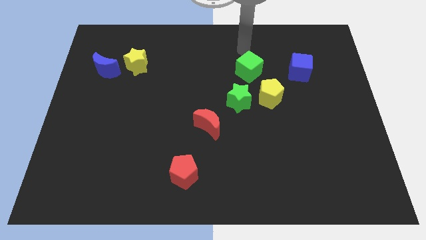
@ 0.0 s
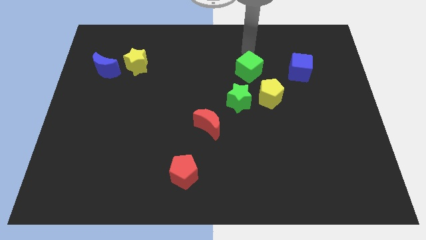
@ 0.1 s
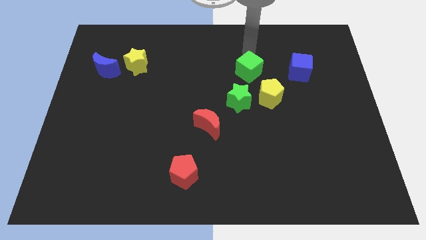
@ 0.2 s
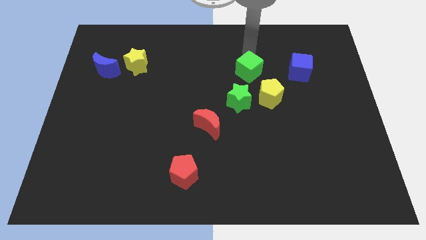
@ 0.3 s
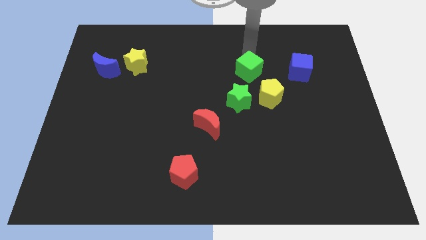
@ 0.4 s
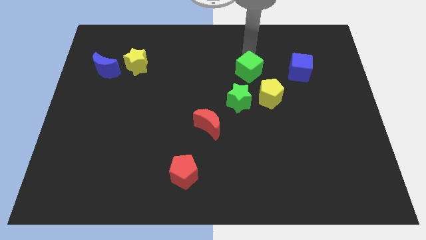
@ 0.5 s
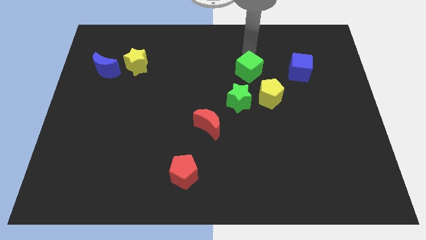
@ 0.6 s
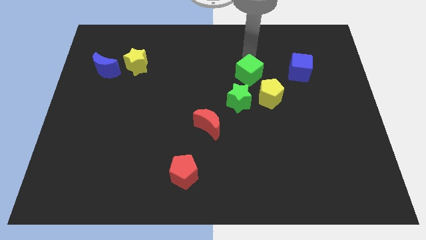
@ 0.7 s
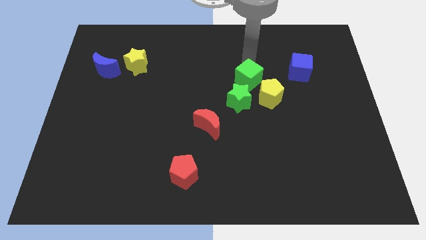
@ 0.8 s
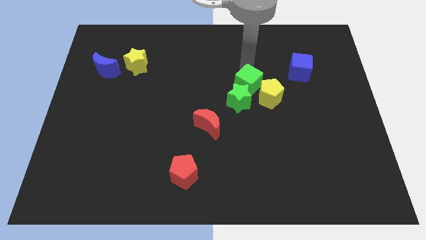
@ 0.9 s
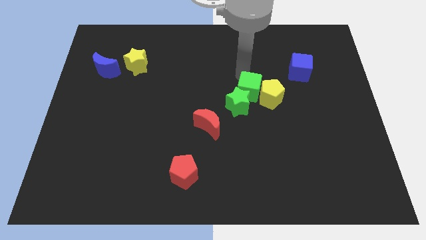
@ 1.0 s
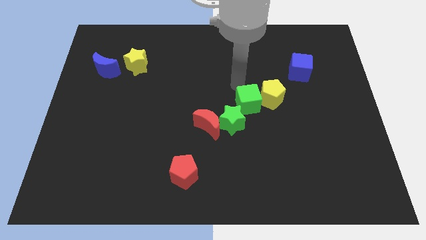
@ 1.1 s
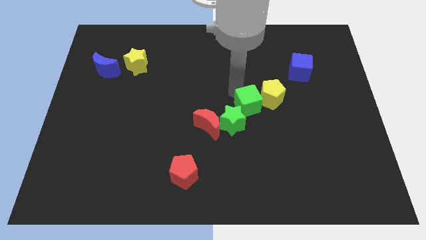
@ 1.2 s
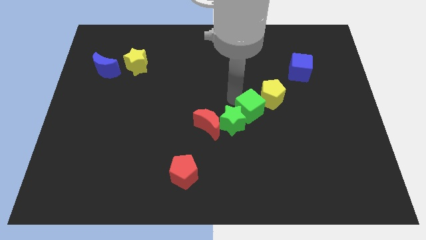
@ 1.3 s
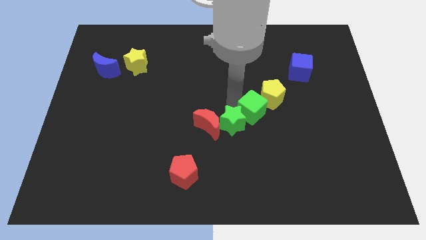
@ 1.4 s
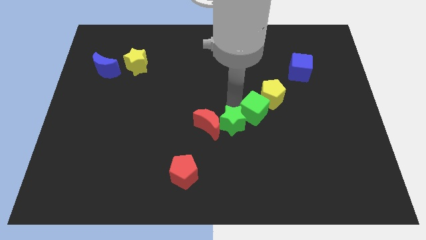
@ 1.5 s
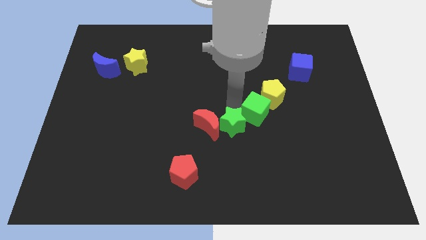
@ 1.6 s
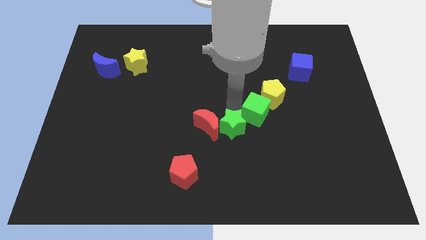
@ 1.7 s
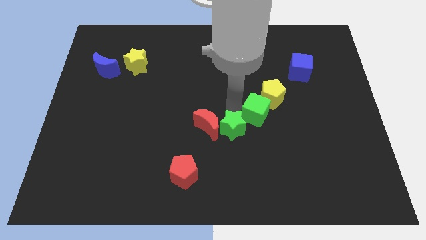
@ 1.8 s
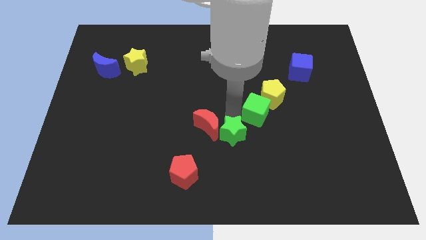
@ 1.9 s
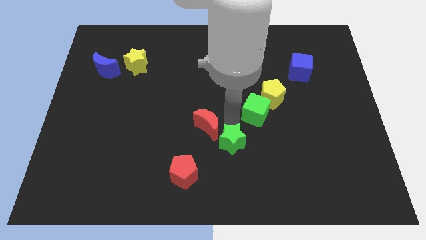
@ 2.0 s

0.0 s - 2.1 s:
push the green cube into the green star

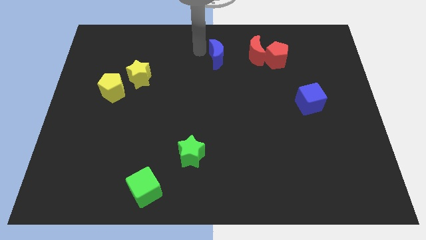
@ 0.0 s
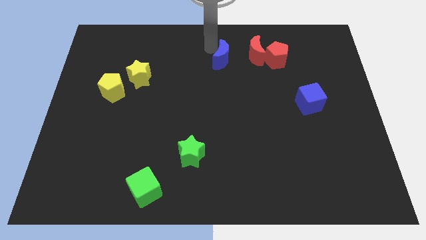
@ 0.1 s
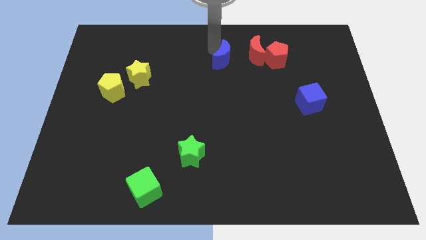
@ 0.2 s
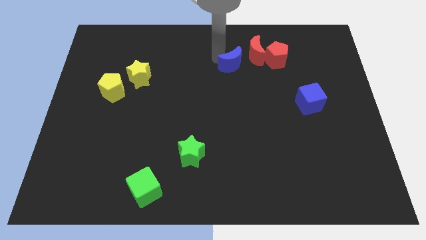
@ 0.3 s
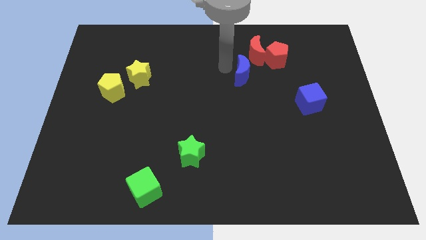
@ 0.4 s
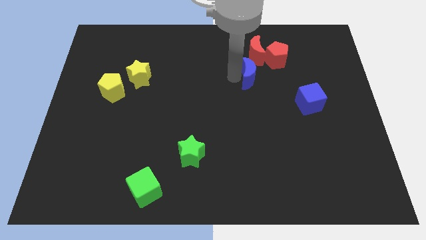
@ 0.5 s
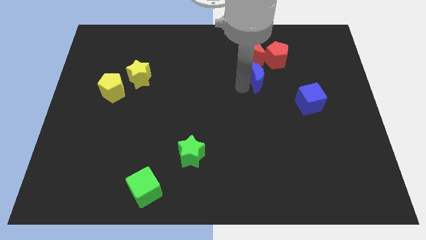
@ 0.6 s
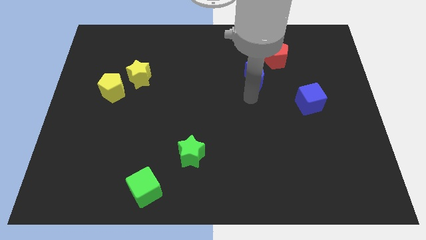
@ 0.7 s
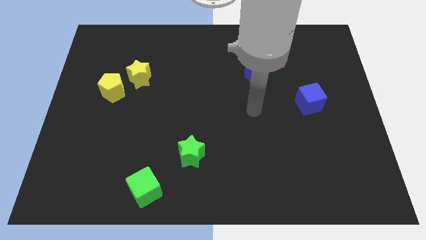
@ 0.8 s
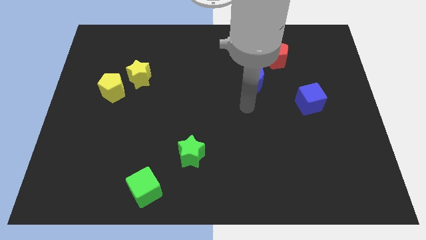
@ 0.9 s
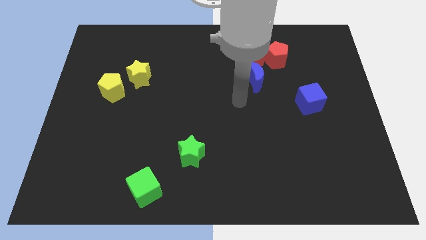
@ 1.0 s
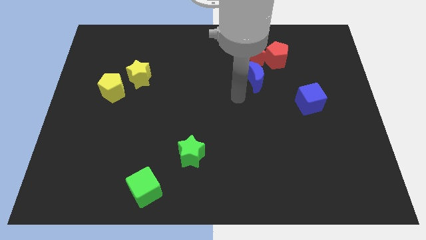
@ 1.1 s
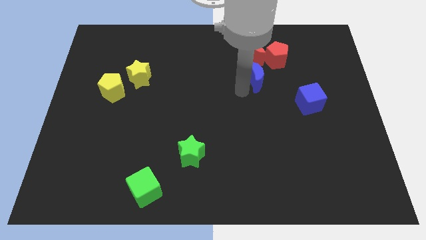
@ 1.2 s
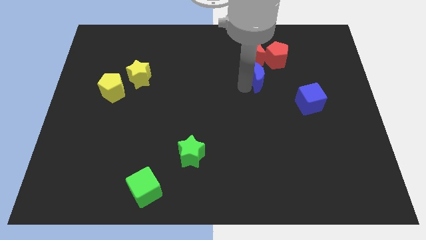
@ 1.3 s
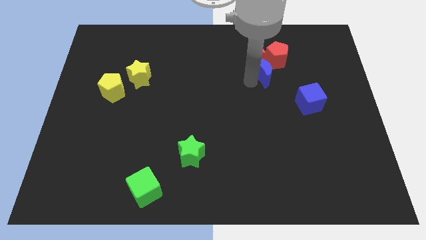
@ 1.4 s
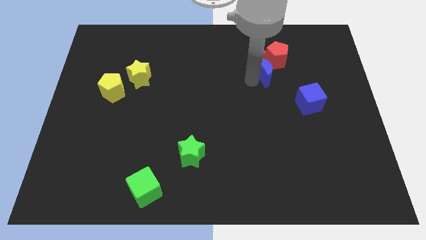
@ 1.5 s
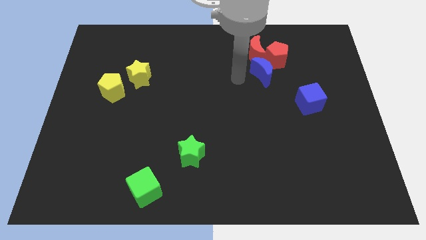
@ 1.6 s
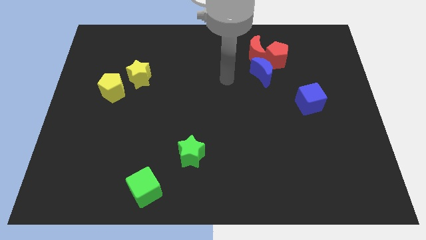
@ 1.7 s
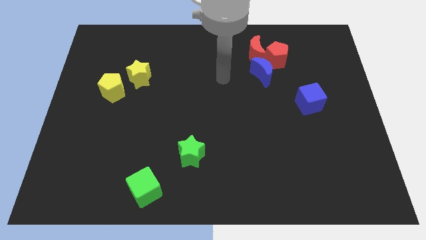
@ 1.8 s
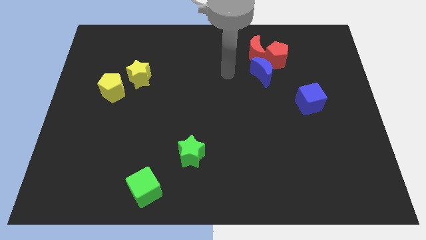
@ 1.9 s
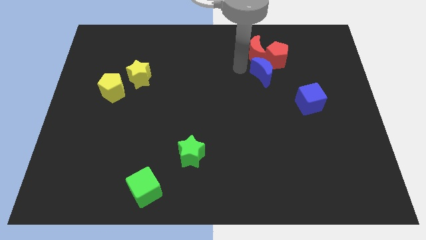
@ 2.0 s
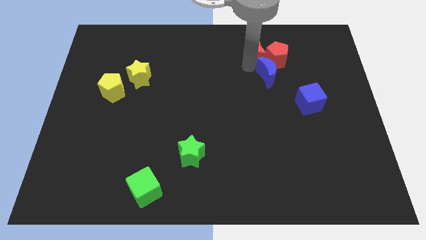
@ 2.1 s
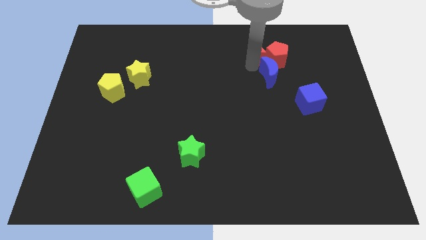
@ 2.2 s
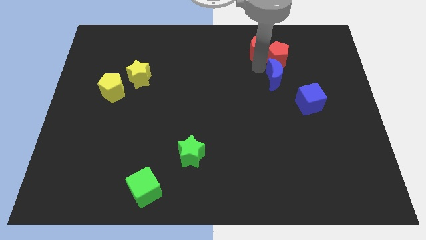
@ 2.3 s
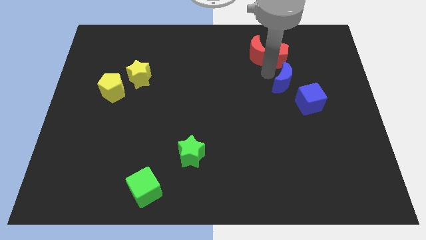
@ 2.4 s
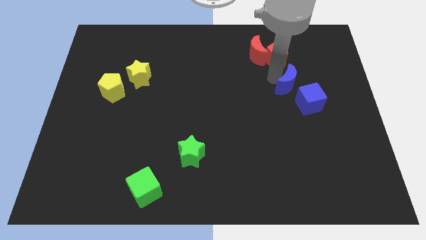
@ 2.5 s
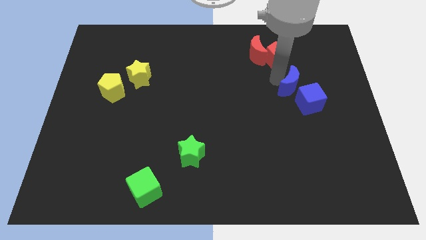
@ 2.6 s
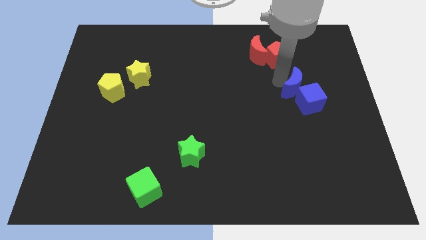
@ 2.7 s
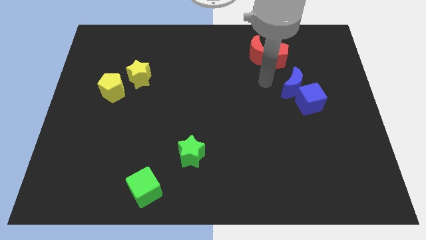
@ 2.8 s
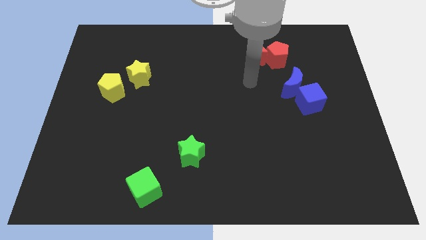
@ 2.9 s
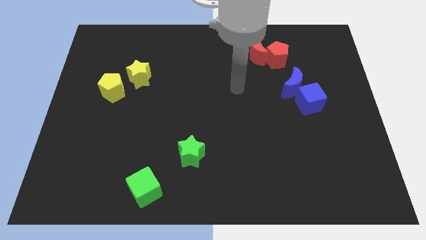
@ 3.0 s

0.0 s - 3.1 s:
place the blue moon close to the blue cube

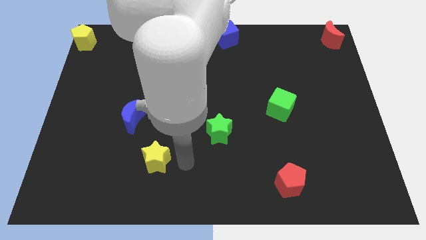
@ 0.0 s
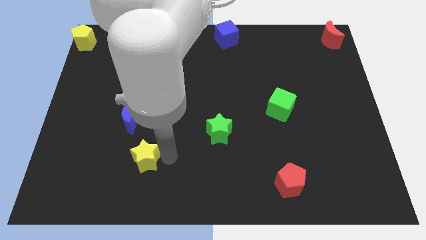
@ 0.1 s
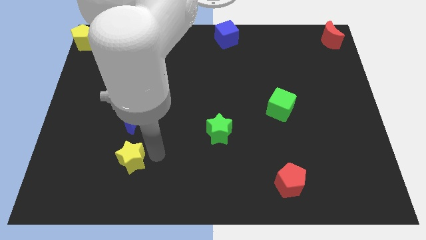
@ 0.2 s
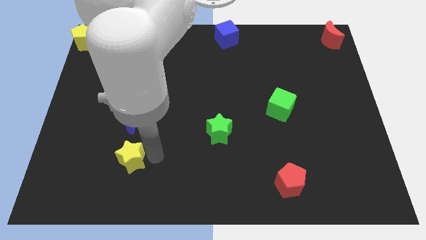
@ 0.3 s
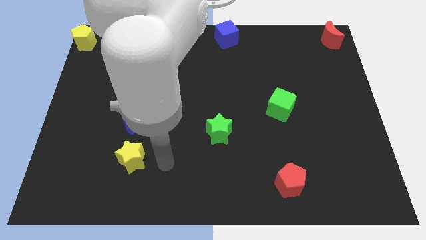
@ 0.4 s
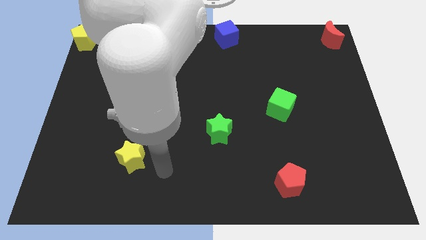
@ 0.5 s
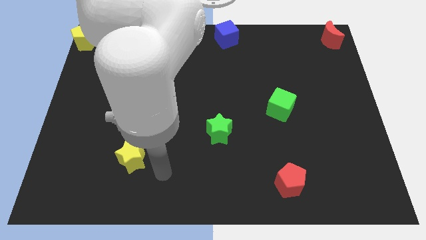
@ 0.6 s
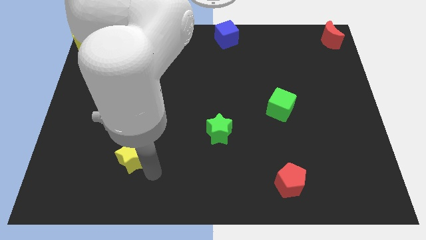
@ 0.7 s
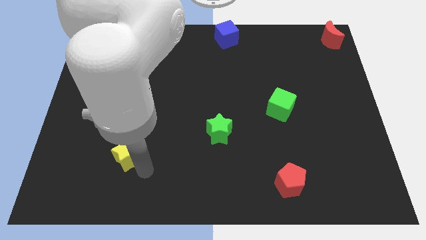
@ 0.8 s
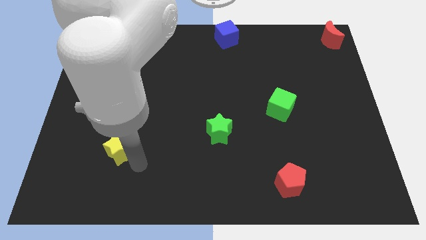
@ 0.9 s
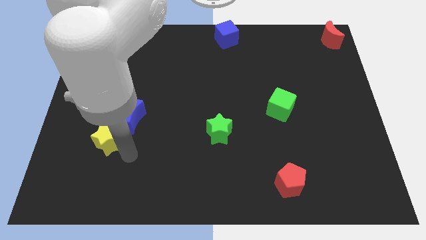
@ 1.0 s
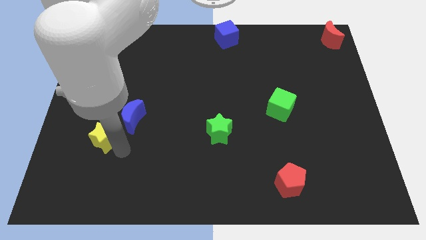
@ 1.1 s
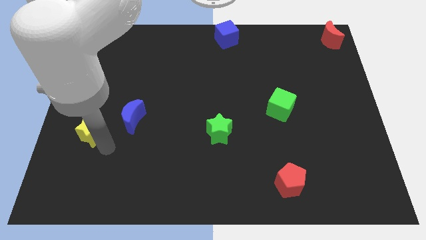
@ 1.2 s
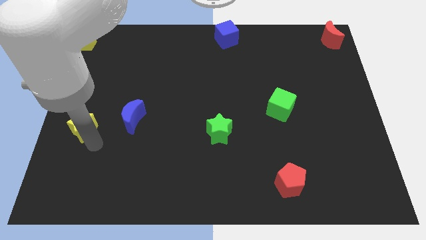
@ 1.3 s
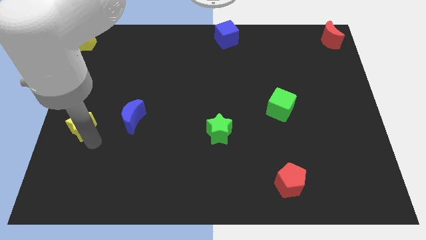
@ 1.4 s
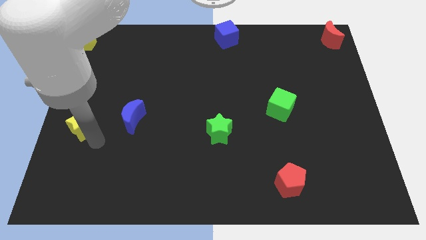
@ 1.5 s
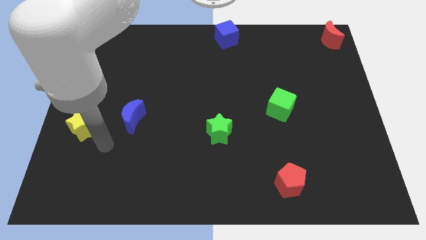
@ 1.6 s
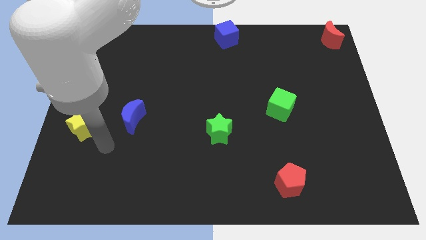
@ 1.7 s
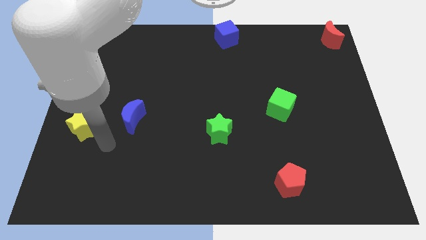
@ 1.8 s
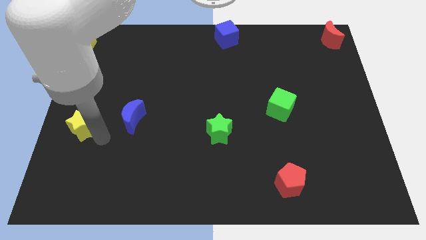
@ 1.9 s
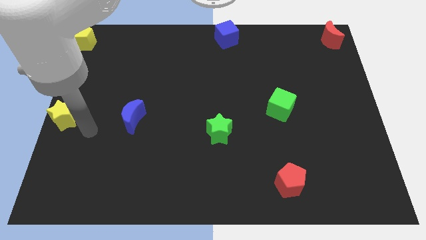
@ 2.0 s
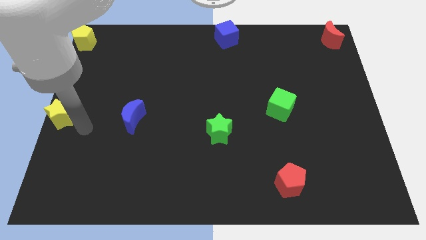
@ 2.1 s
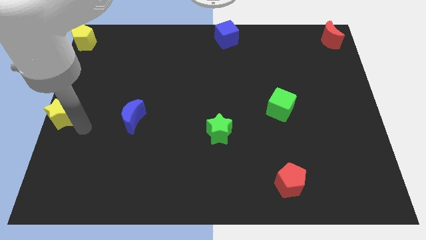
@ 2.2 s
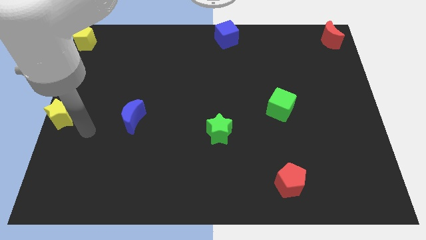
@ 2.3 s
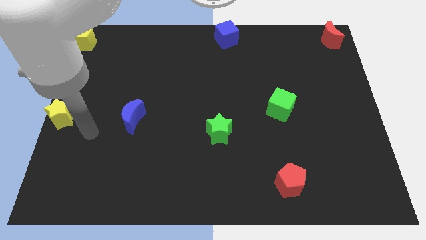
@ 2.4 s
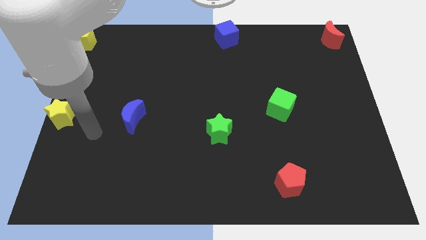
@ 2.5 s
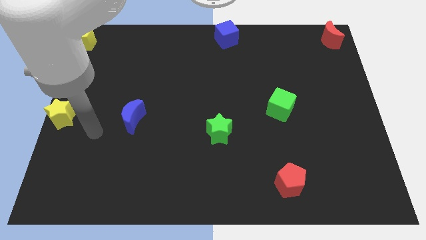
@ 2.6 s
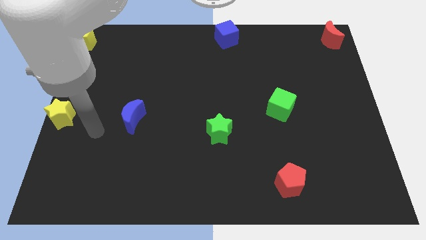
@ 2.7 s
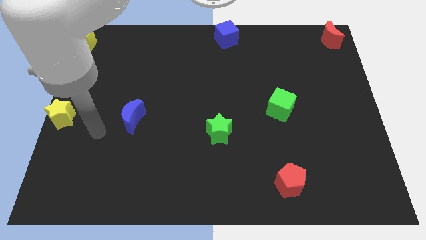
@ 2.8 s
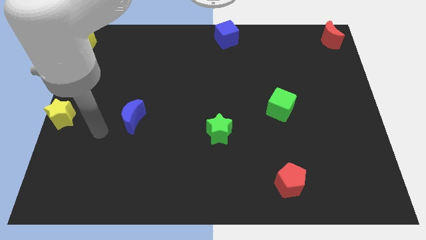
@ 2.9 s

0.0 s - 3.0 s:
place the yellow star vertically below the yellow pentagon

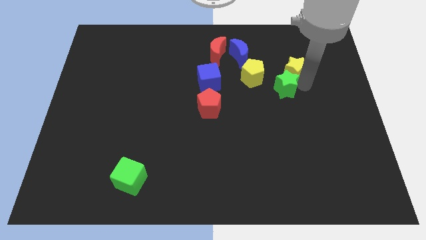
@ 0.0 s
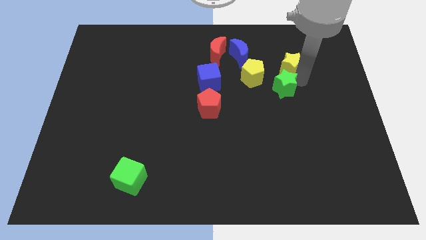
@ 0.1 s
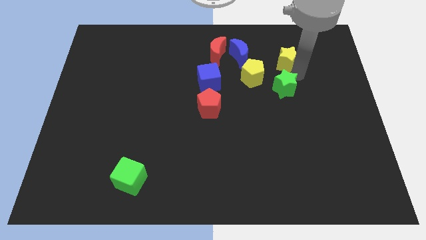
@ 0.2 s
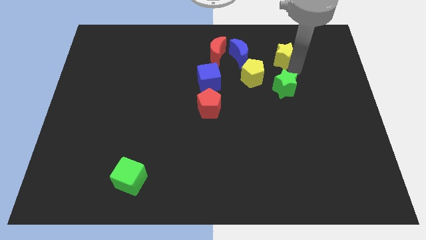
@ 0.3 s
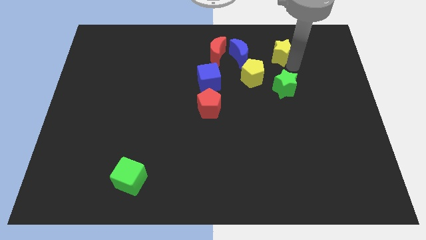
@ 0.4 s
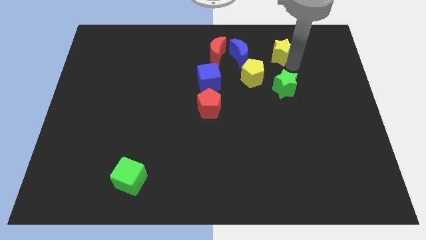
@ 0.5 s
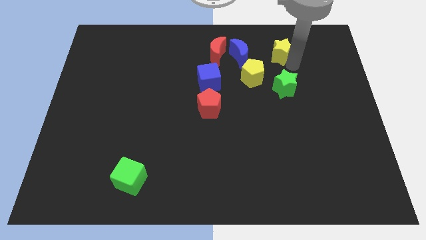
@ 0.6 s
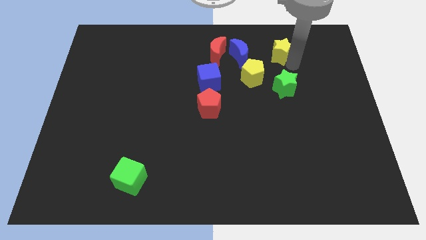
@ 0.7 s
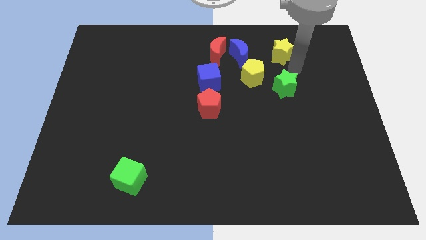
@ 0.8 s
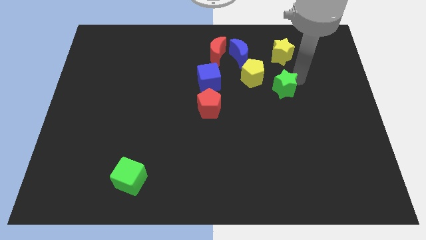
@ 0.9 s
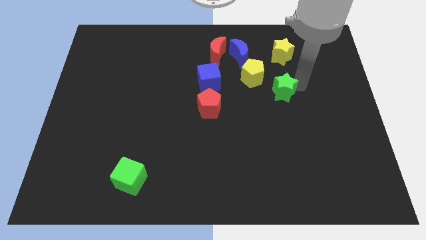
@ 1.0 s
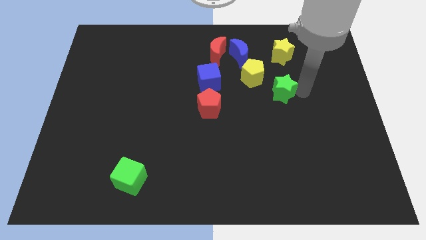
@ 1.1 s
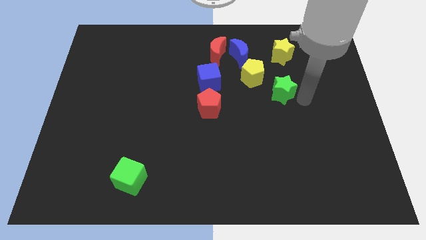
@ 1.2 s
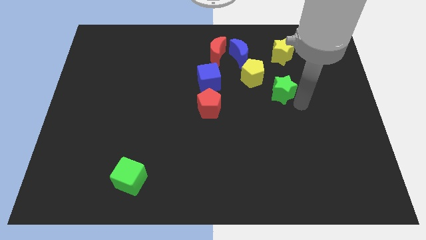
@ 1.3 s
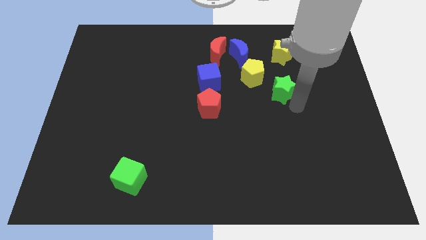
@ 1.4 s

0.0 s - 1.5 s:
separate the yellow star and the green star
